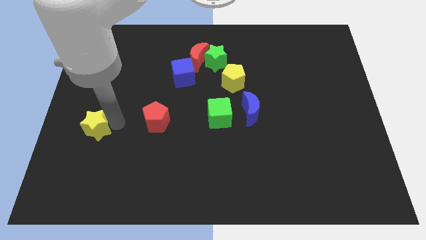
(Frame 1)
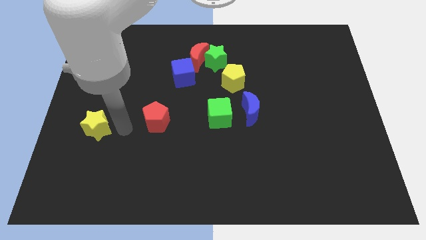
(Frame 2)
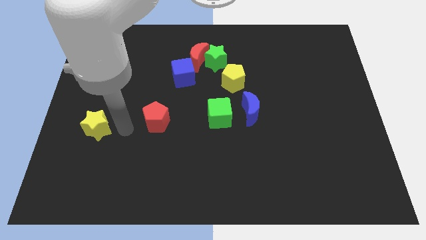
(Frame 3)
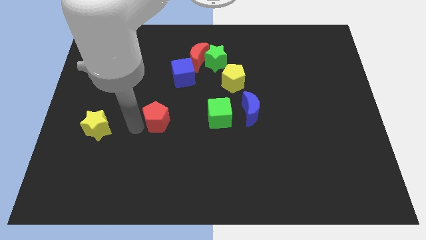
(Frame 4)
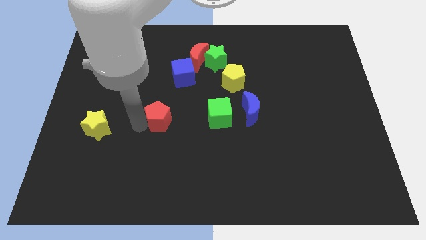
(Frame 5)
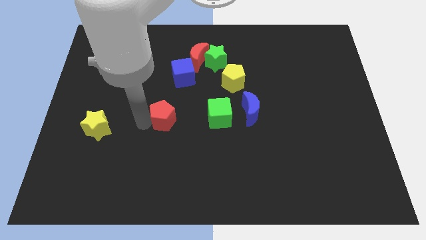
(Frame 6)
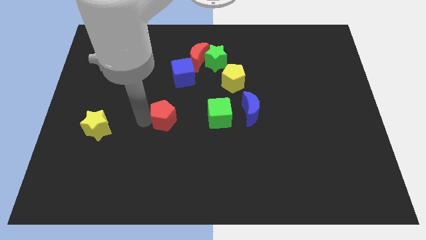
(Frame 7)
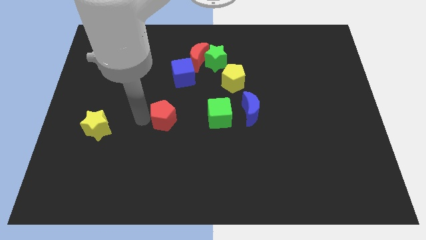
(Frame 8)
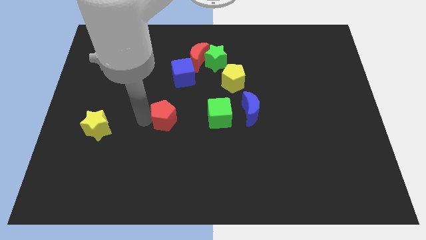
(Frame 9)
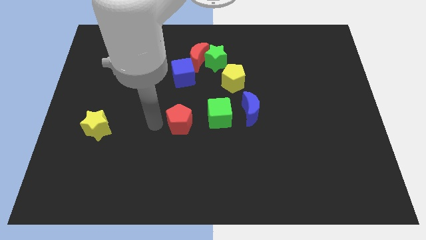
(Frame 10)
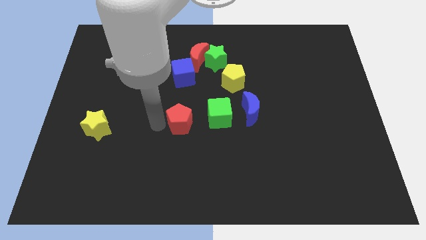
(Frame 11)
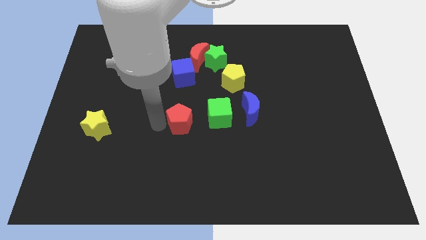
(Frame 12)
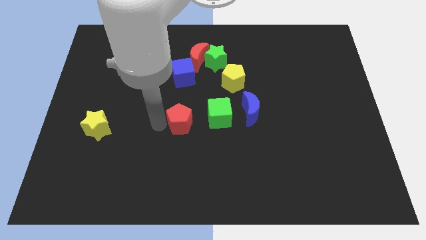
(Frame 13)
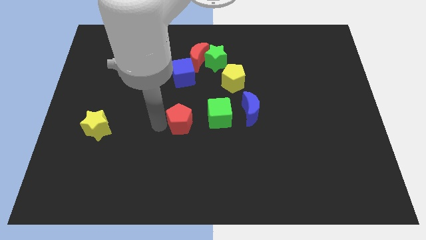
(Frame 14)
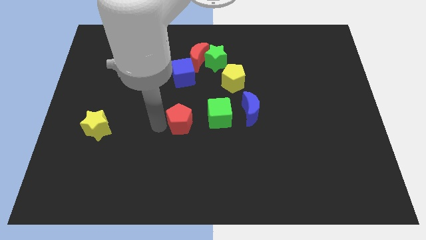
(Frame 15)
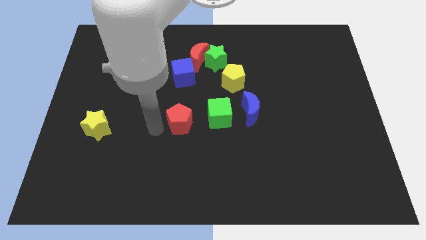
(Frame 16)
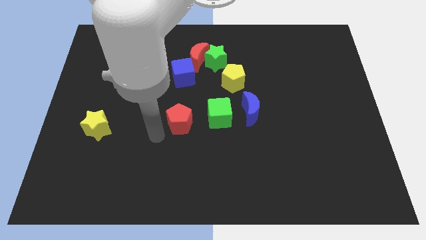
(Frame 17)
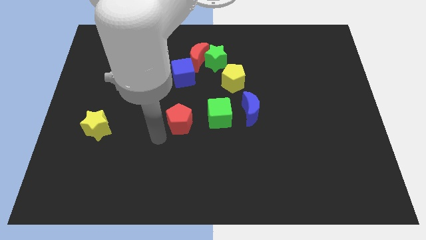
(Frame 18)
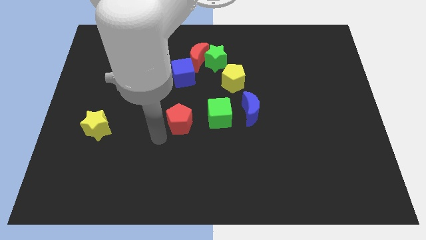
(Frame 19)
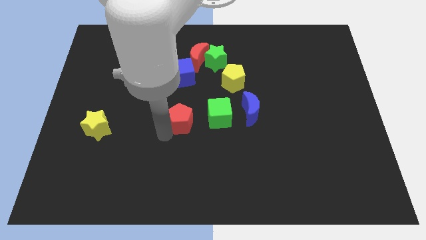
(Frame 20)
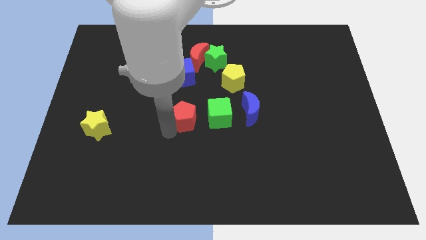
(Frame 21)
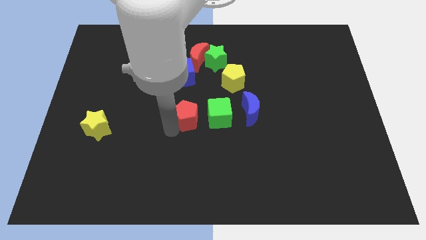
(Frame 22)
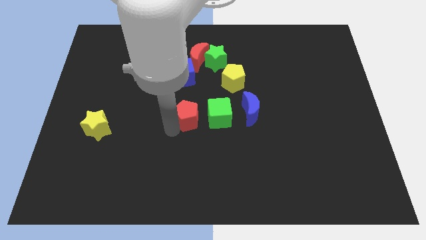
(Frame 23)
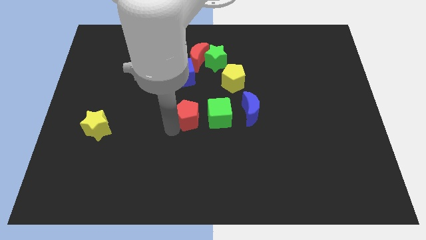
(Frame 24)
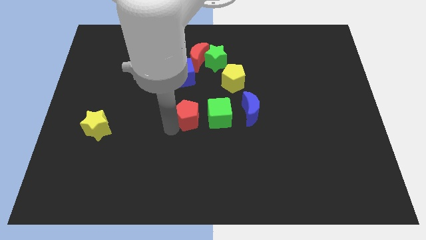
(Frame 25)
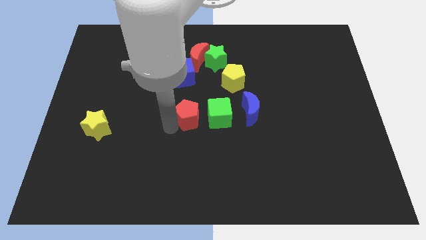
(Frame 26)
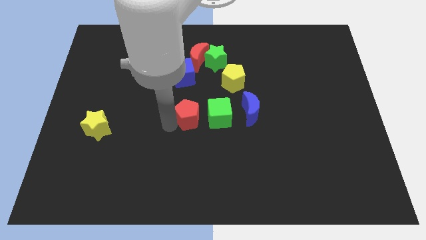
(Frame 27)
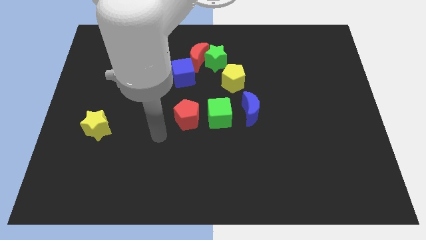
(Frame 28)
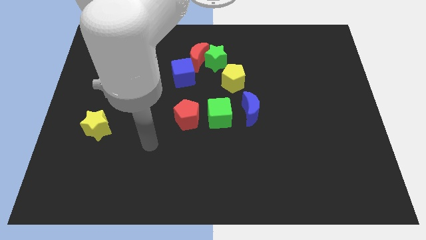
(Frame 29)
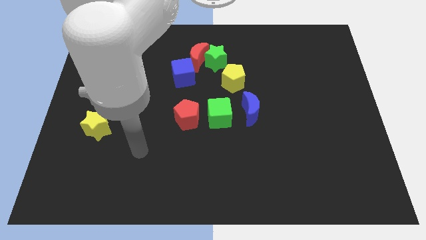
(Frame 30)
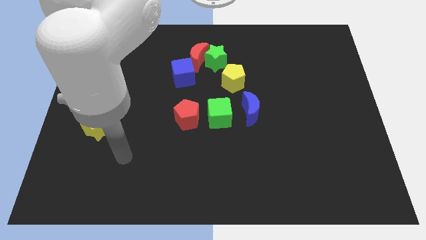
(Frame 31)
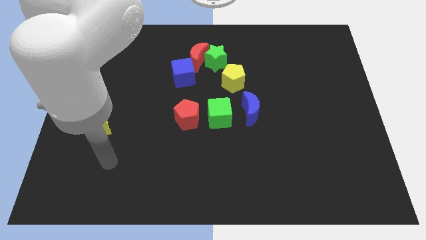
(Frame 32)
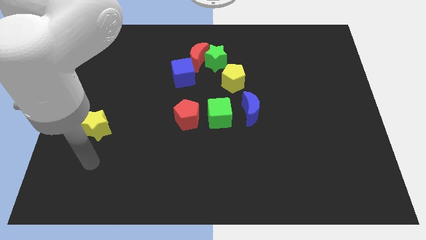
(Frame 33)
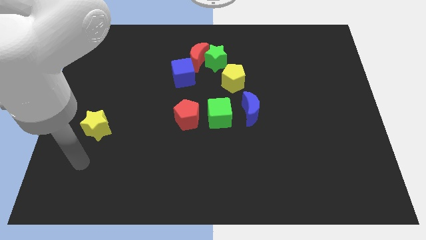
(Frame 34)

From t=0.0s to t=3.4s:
move red pentagon towards green cube

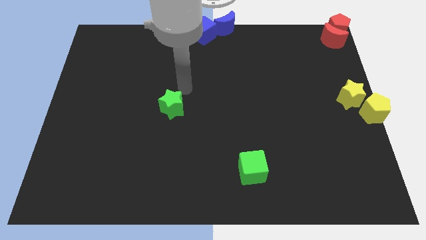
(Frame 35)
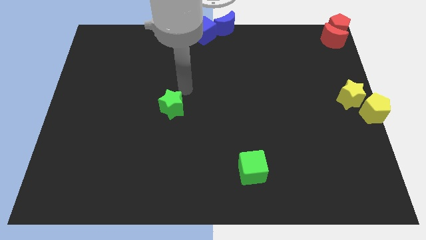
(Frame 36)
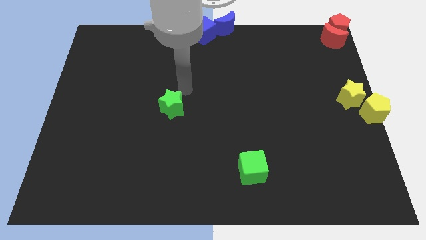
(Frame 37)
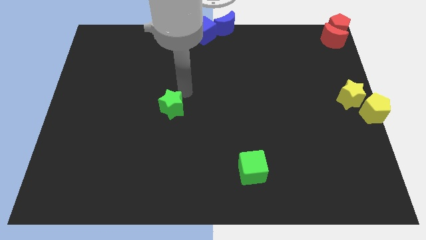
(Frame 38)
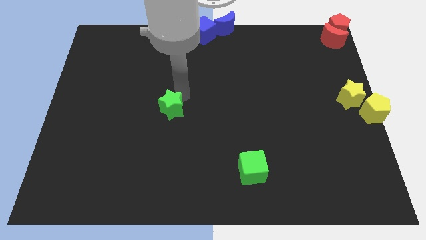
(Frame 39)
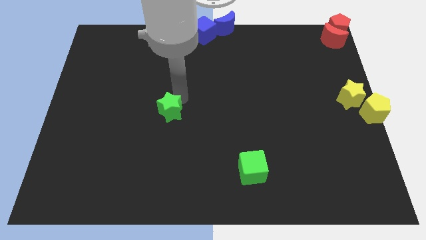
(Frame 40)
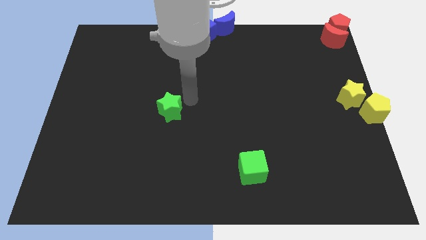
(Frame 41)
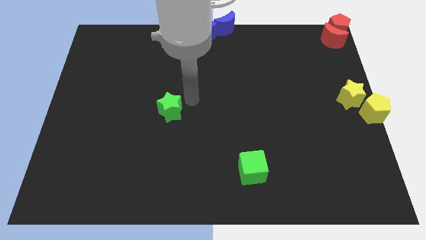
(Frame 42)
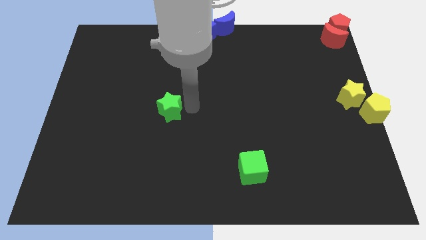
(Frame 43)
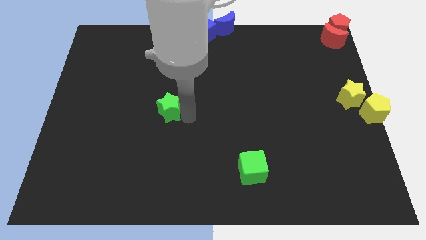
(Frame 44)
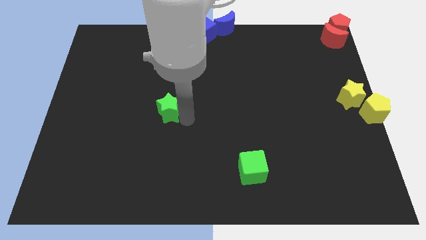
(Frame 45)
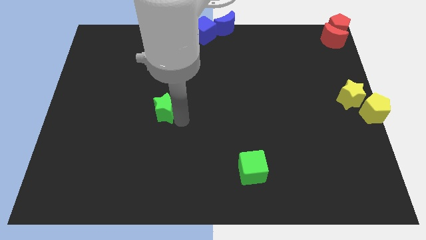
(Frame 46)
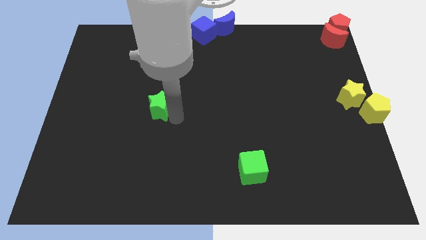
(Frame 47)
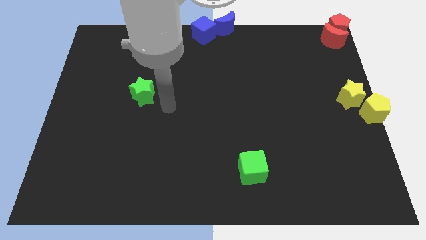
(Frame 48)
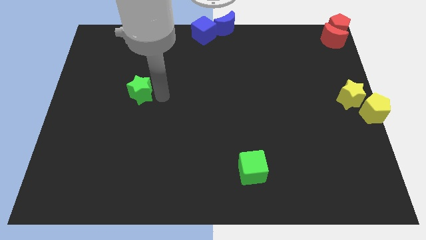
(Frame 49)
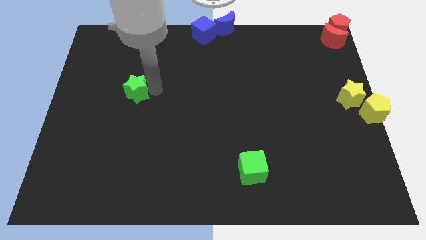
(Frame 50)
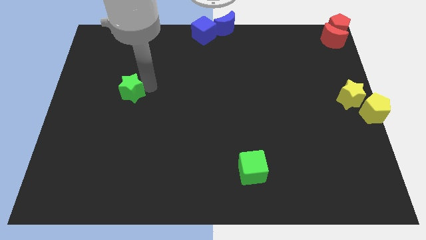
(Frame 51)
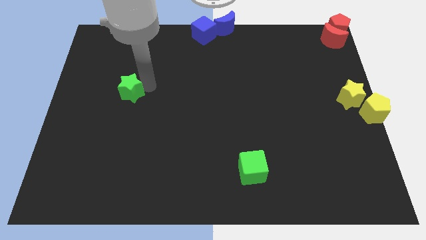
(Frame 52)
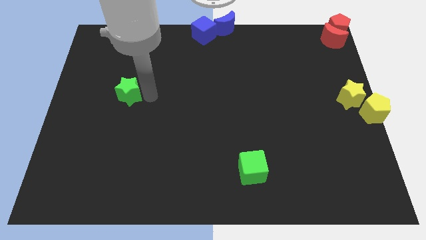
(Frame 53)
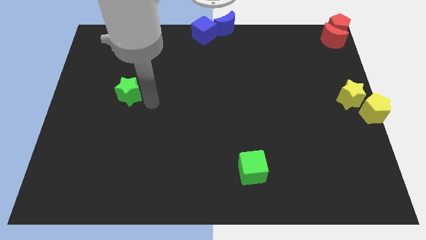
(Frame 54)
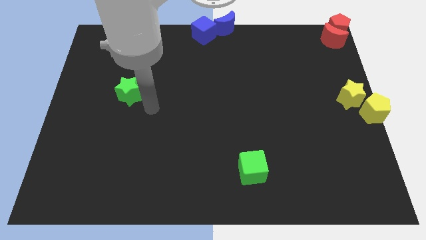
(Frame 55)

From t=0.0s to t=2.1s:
drag the green star towards the left side of the board

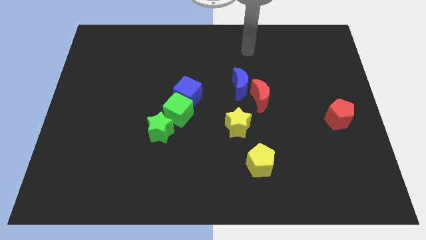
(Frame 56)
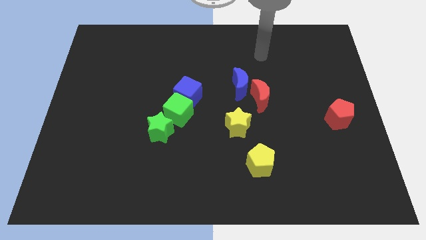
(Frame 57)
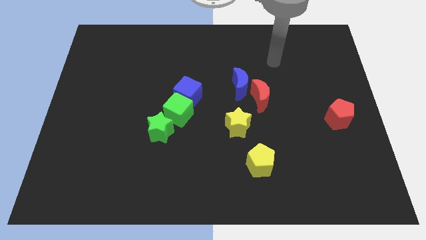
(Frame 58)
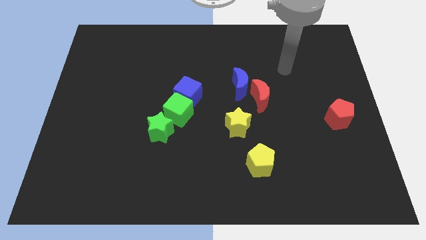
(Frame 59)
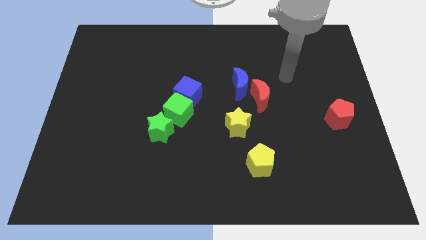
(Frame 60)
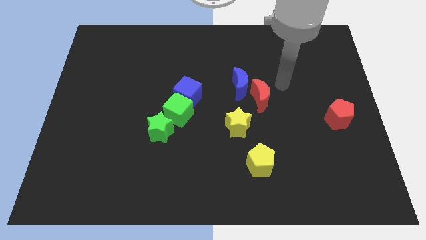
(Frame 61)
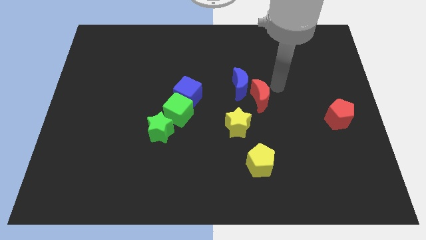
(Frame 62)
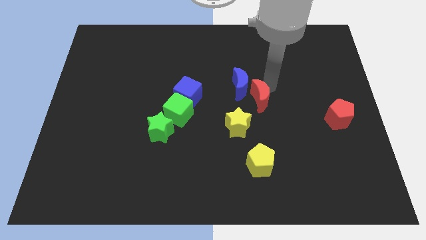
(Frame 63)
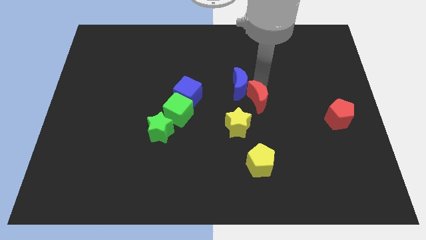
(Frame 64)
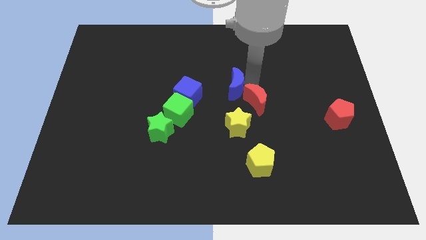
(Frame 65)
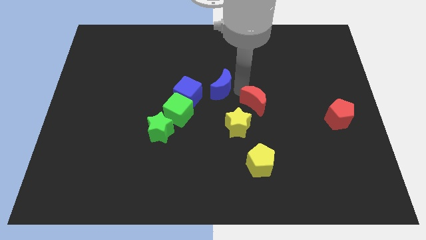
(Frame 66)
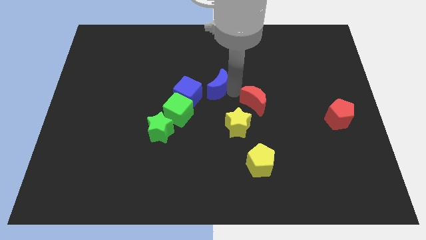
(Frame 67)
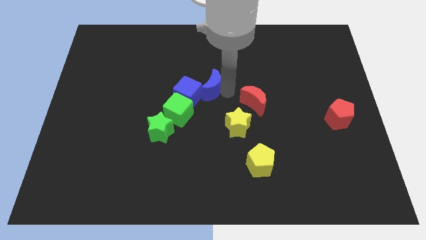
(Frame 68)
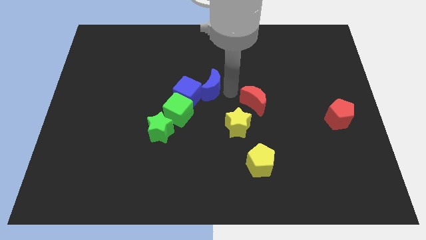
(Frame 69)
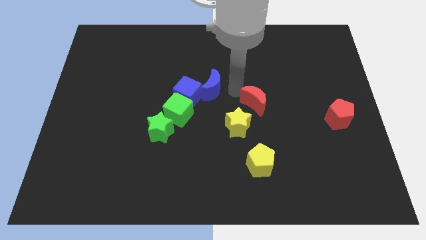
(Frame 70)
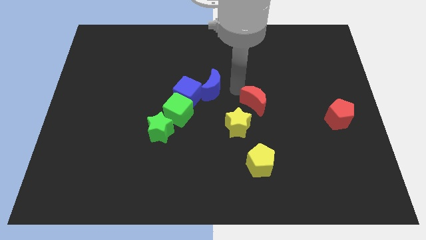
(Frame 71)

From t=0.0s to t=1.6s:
push the blue crescent into the blue cube

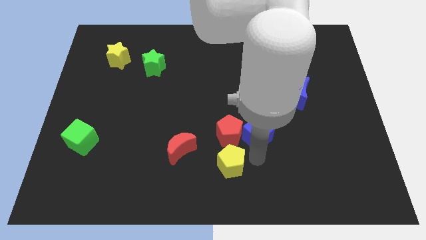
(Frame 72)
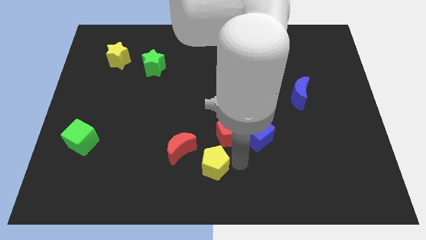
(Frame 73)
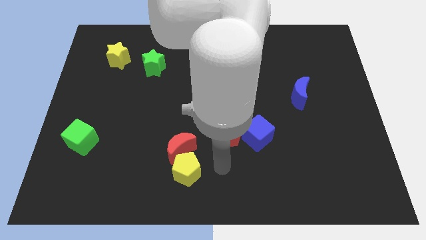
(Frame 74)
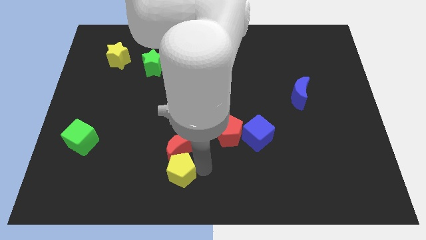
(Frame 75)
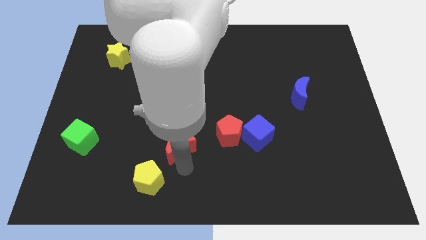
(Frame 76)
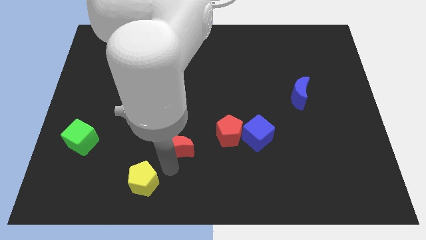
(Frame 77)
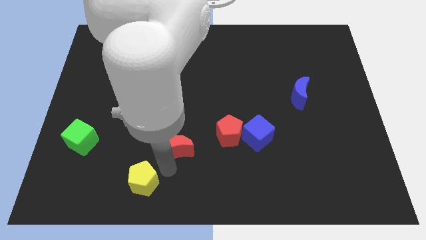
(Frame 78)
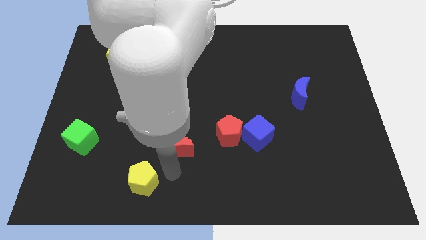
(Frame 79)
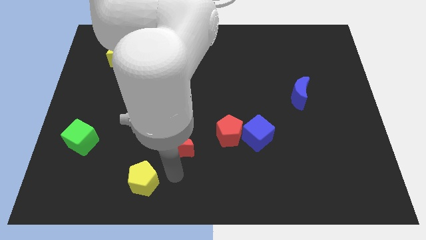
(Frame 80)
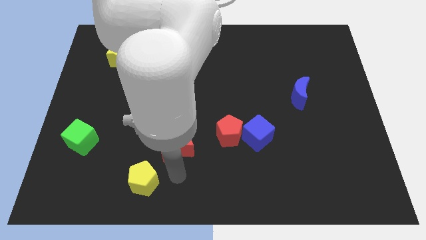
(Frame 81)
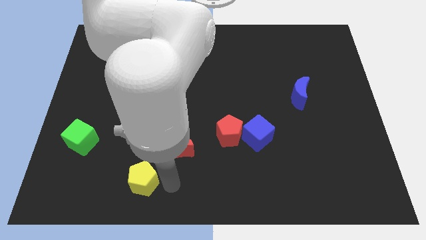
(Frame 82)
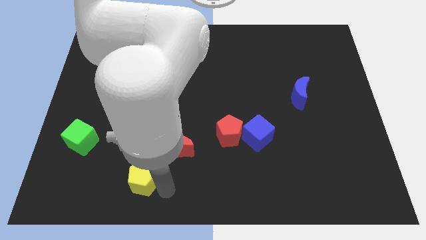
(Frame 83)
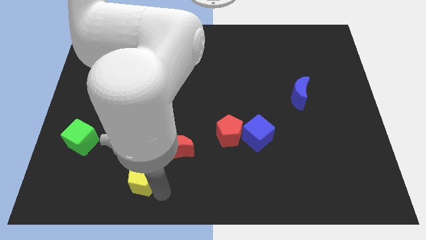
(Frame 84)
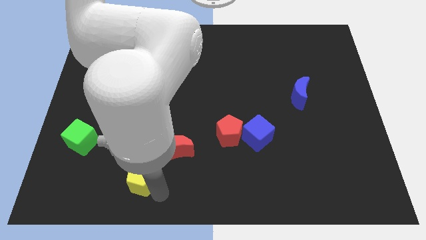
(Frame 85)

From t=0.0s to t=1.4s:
push the yellow pentagon to the left of the board

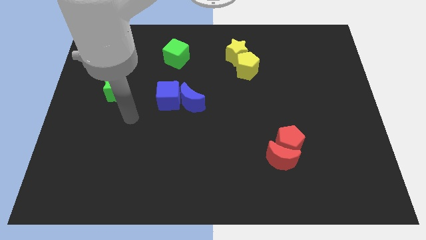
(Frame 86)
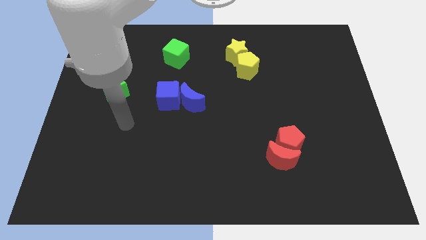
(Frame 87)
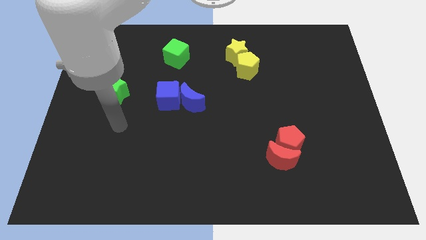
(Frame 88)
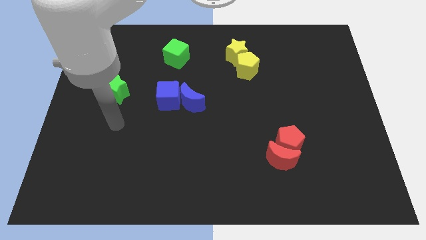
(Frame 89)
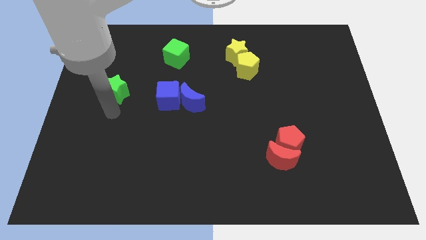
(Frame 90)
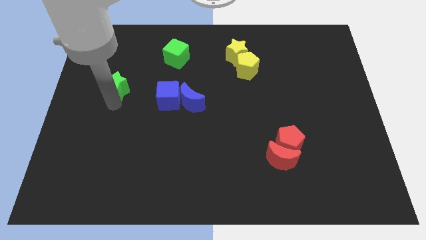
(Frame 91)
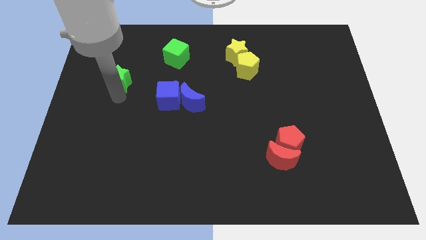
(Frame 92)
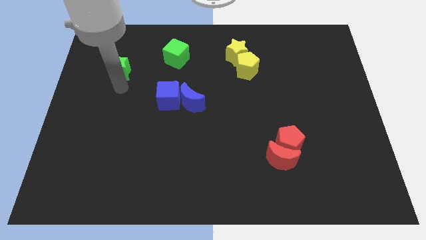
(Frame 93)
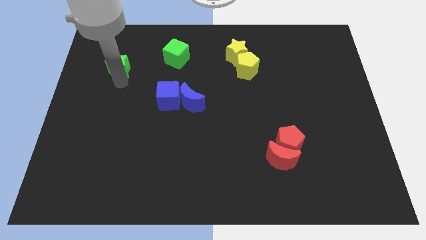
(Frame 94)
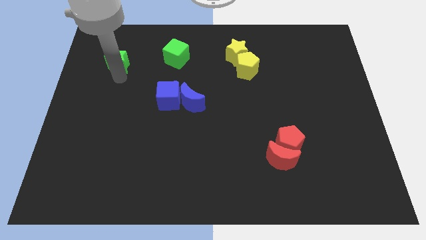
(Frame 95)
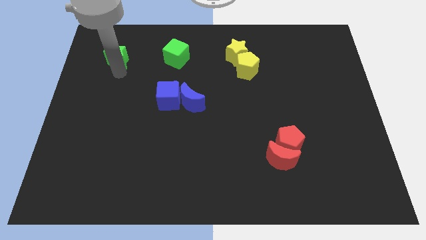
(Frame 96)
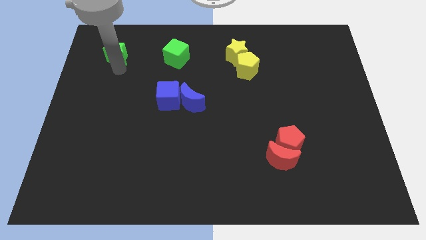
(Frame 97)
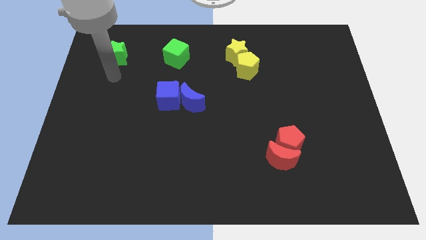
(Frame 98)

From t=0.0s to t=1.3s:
place green star parallel to green cube
